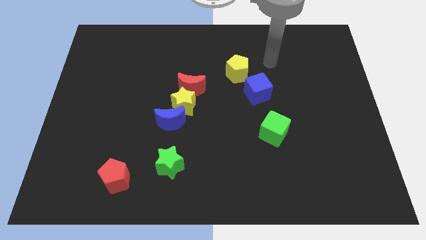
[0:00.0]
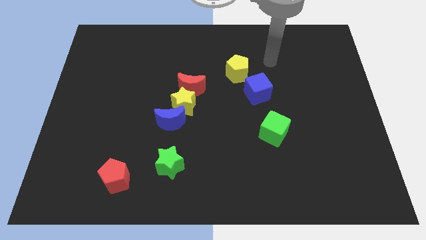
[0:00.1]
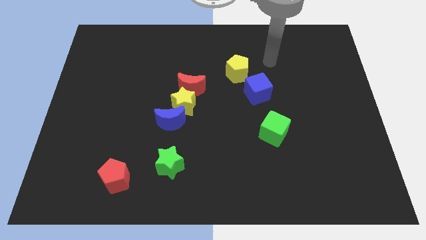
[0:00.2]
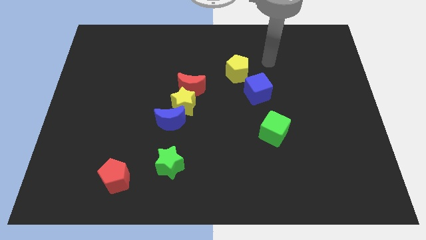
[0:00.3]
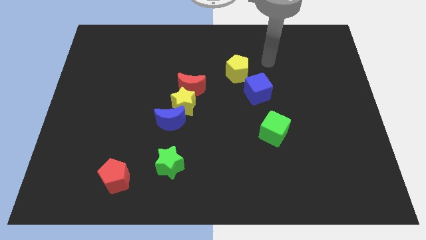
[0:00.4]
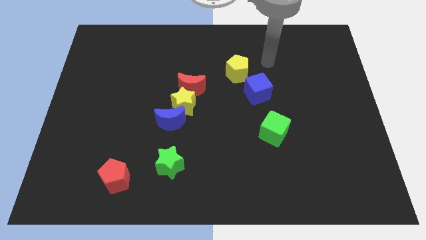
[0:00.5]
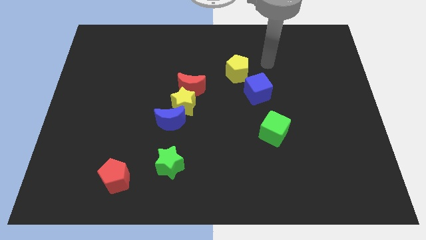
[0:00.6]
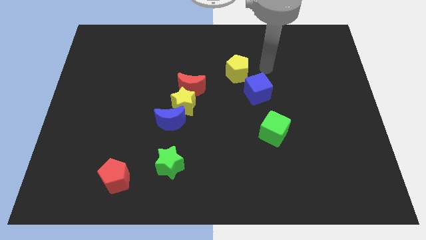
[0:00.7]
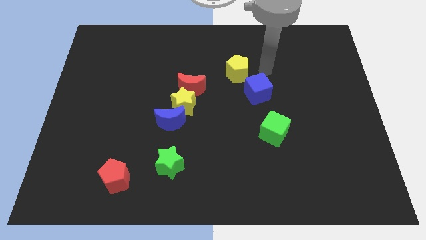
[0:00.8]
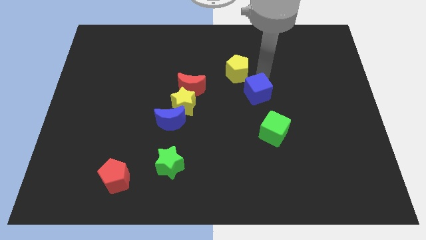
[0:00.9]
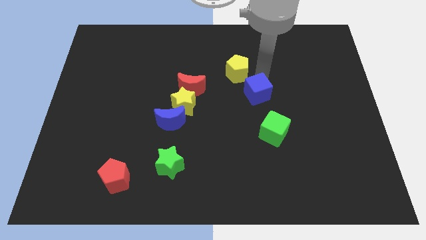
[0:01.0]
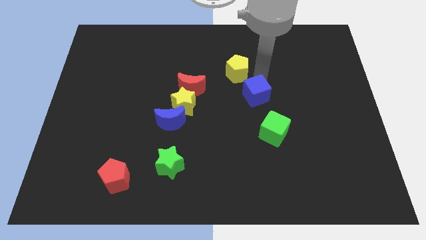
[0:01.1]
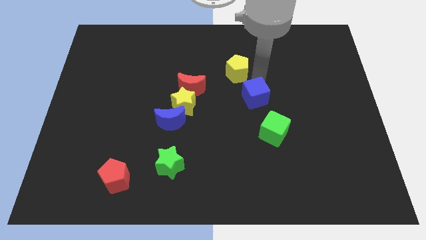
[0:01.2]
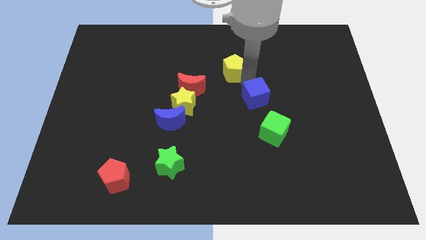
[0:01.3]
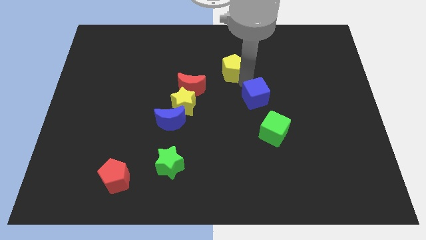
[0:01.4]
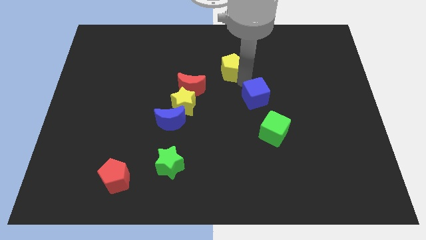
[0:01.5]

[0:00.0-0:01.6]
place your arm in between the yellow pentagon and blue cube

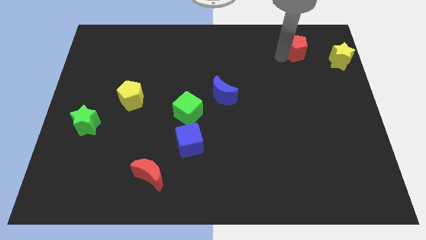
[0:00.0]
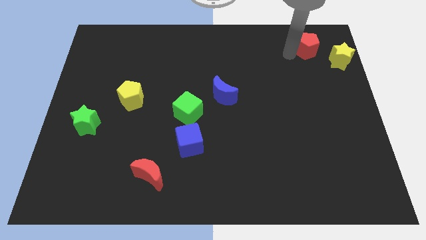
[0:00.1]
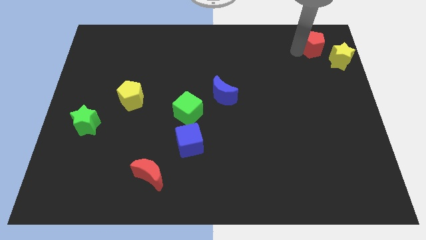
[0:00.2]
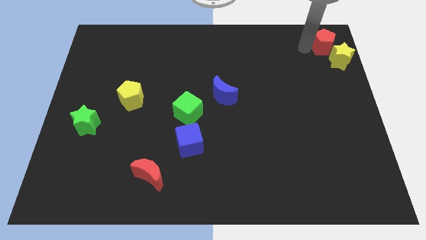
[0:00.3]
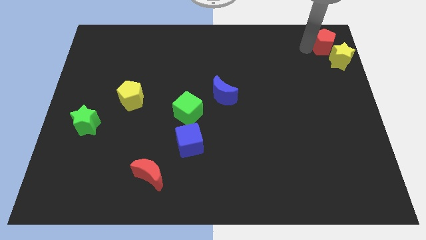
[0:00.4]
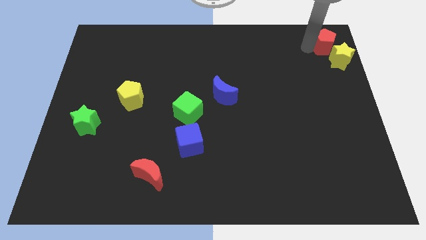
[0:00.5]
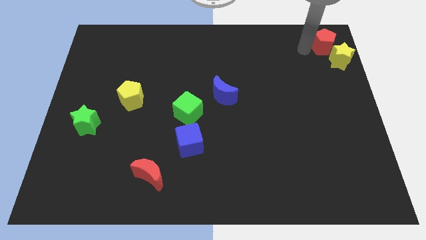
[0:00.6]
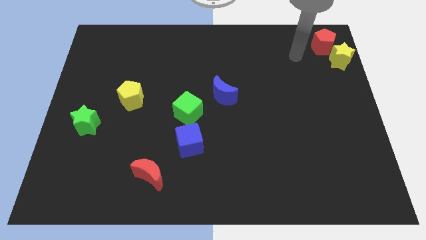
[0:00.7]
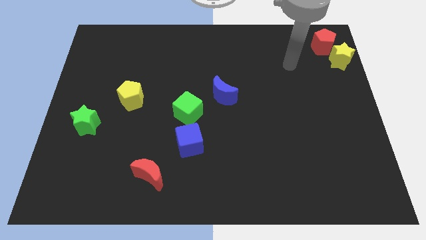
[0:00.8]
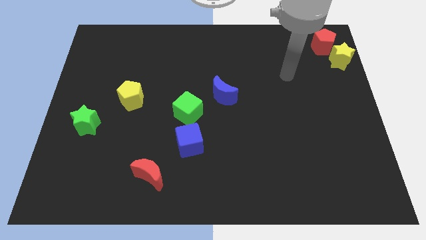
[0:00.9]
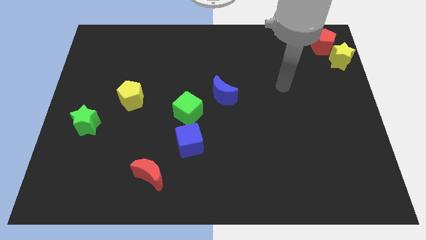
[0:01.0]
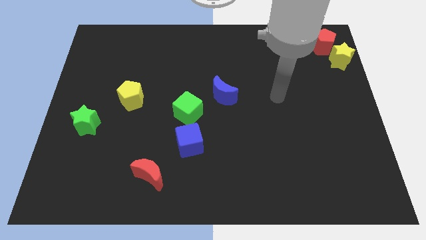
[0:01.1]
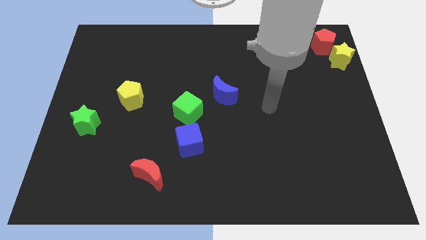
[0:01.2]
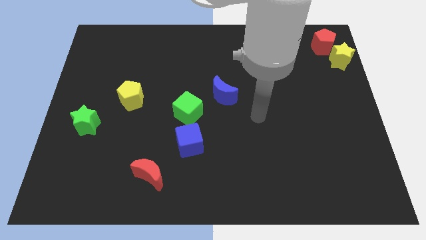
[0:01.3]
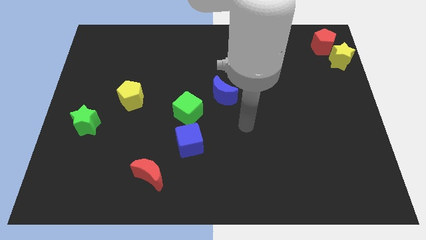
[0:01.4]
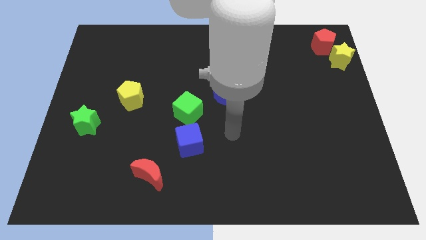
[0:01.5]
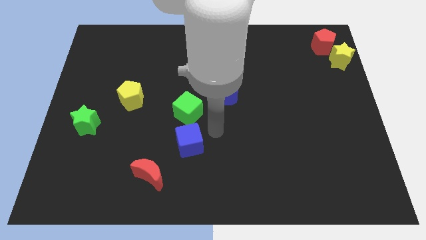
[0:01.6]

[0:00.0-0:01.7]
push the red pentagon towards the yellow star

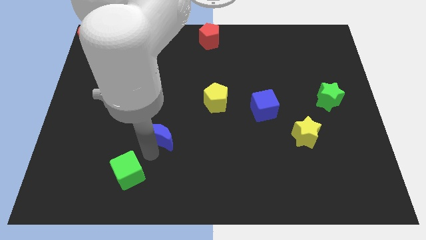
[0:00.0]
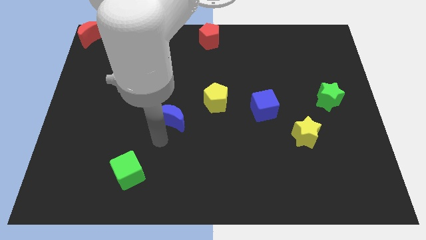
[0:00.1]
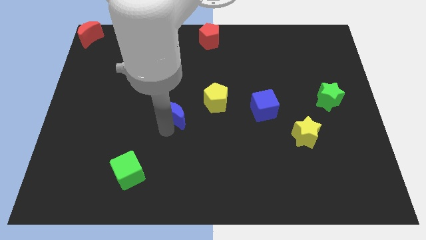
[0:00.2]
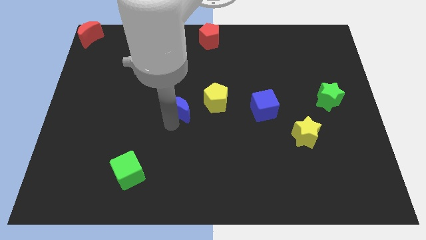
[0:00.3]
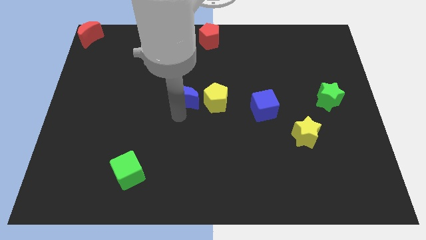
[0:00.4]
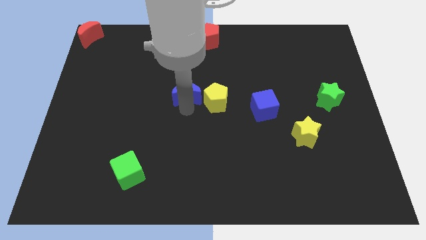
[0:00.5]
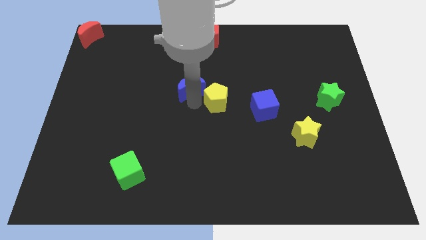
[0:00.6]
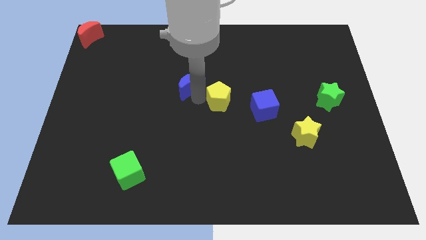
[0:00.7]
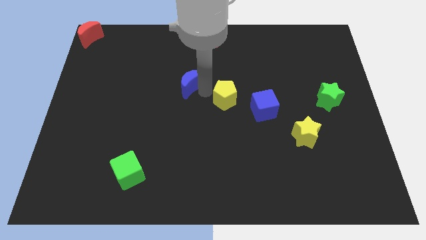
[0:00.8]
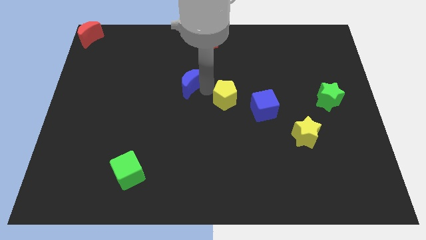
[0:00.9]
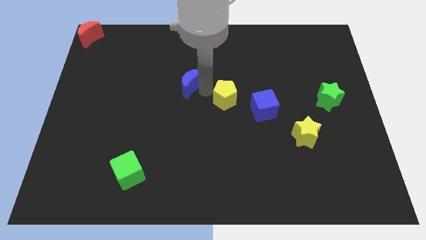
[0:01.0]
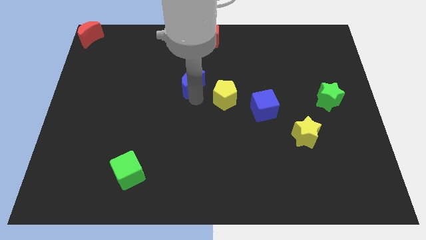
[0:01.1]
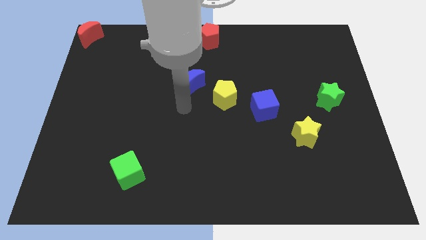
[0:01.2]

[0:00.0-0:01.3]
place blue moon left to the yellow pentagon

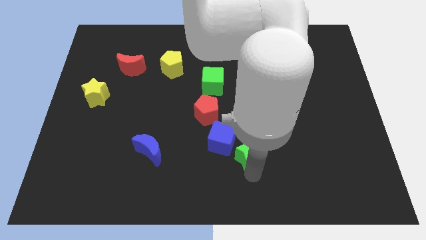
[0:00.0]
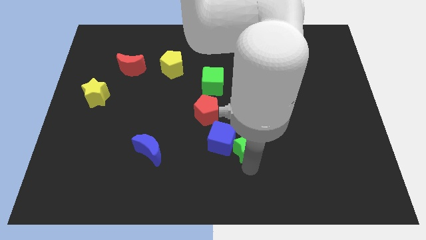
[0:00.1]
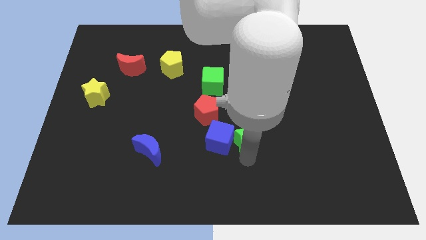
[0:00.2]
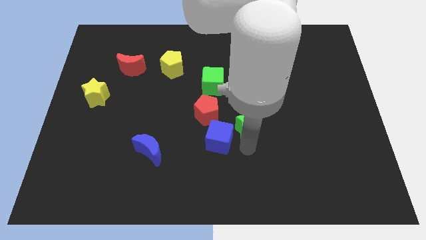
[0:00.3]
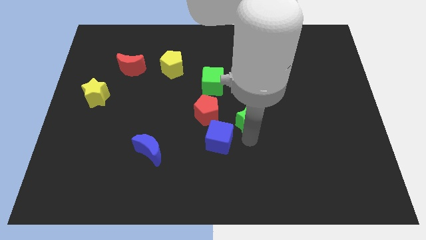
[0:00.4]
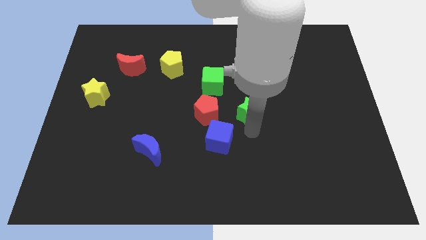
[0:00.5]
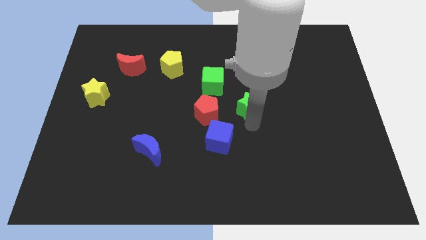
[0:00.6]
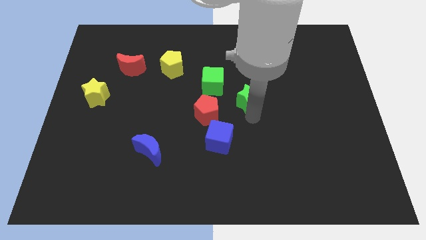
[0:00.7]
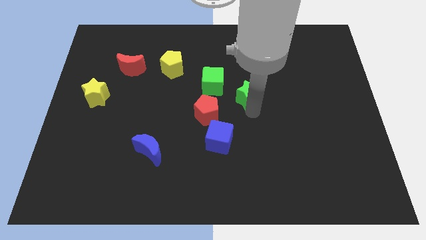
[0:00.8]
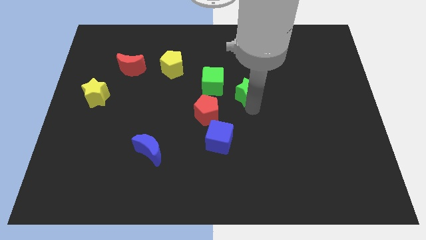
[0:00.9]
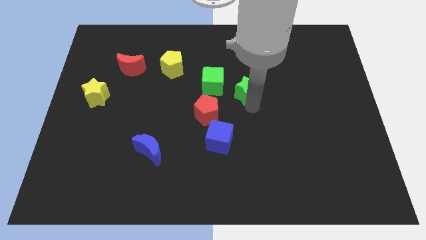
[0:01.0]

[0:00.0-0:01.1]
separate green star from blue cube

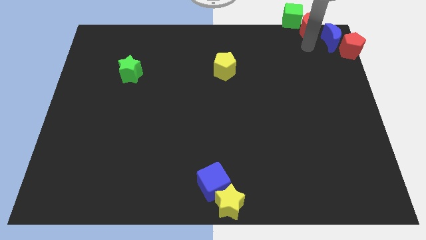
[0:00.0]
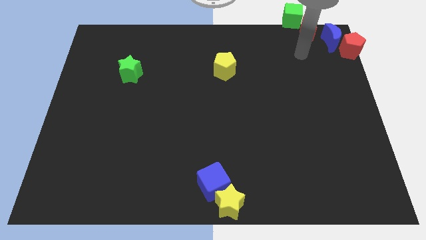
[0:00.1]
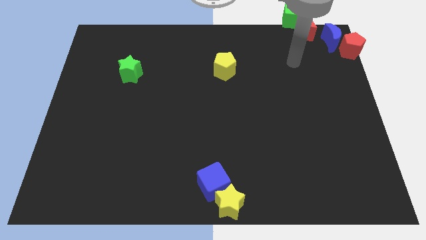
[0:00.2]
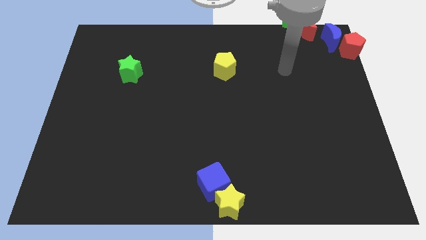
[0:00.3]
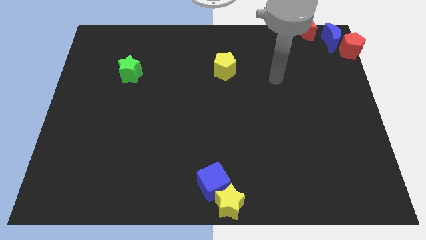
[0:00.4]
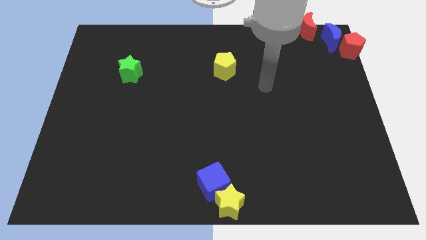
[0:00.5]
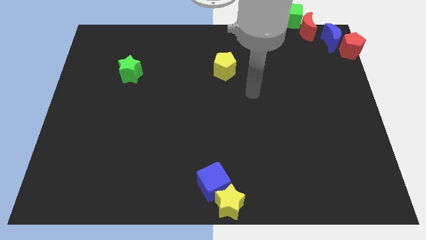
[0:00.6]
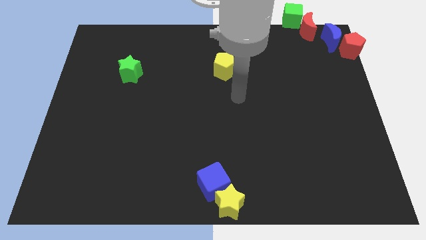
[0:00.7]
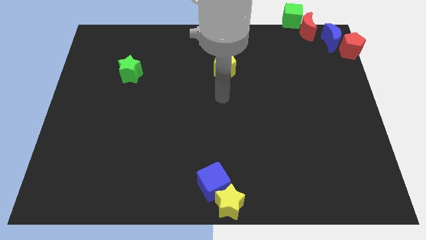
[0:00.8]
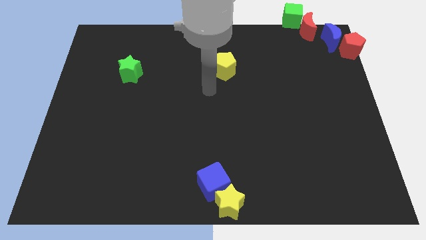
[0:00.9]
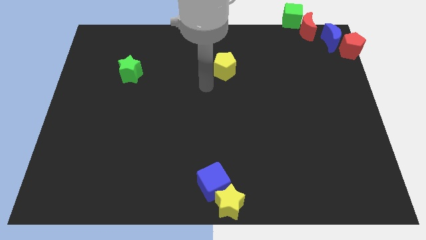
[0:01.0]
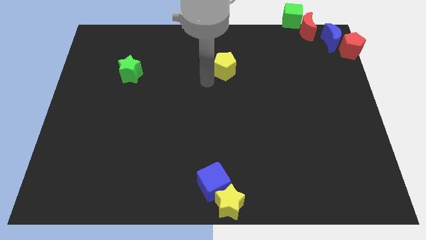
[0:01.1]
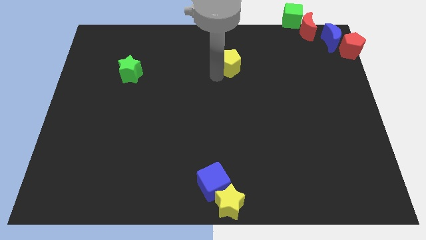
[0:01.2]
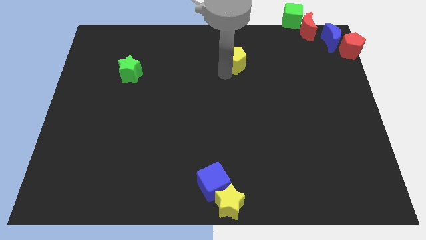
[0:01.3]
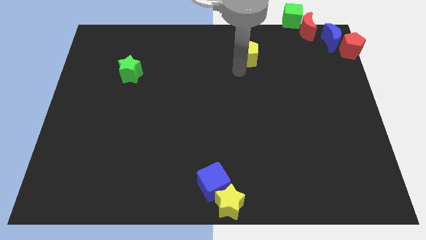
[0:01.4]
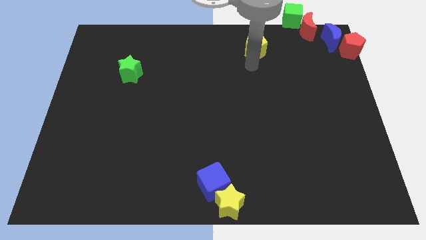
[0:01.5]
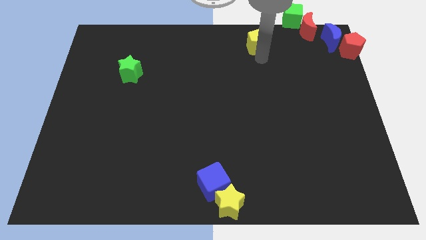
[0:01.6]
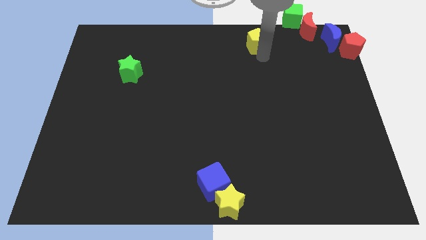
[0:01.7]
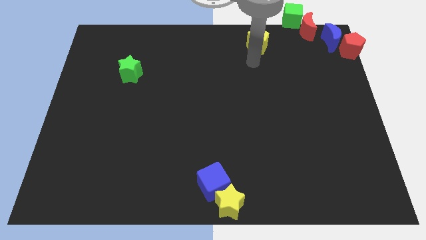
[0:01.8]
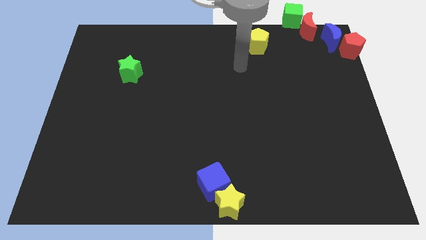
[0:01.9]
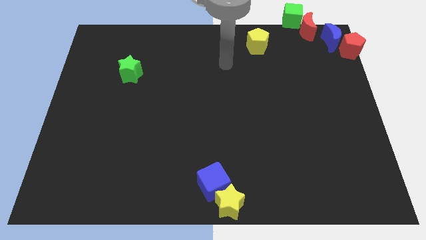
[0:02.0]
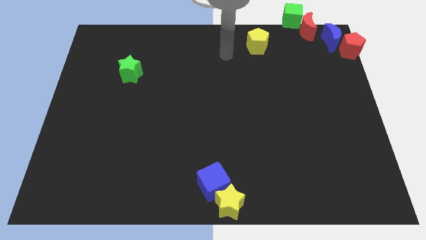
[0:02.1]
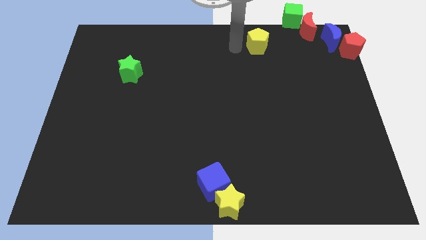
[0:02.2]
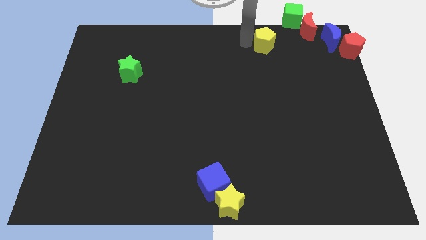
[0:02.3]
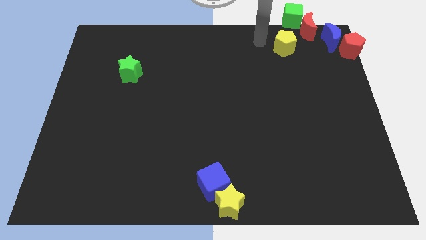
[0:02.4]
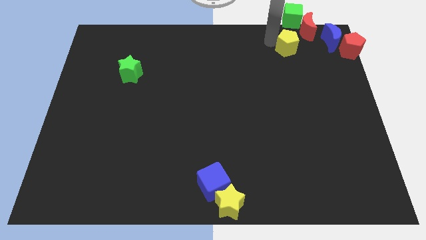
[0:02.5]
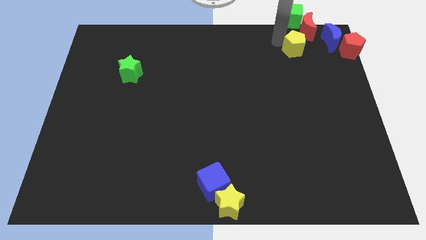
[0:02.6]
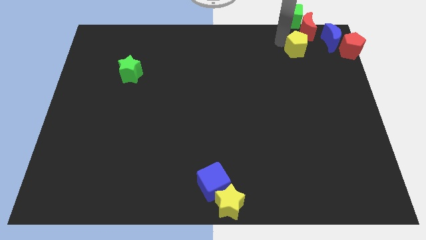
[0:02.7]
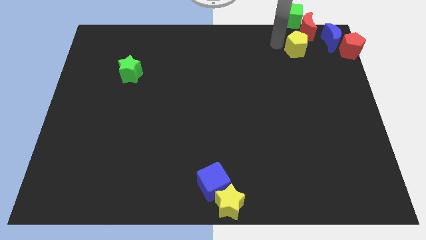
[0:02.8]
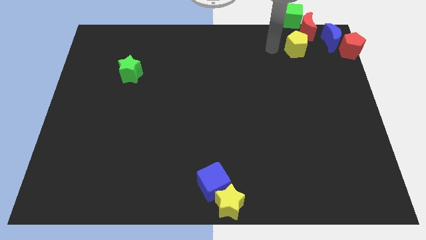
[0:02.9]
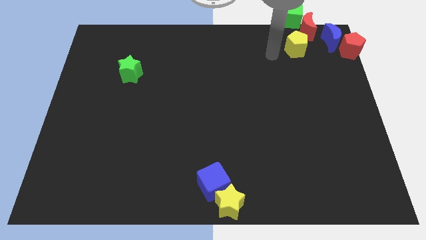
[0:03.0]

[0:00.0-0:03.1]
put the yellow pentagon vertically below the green cube
